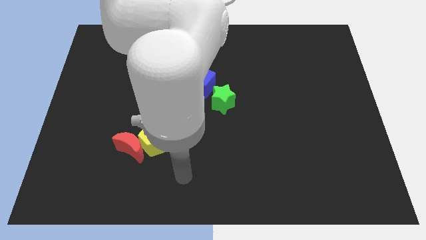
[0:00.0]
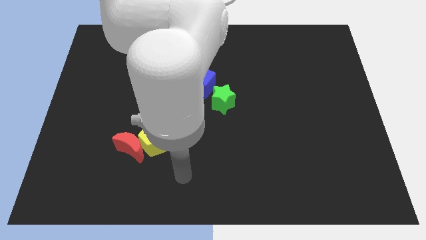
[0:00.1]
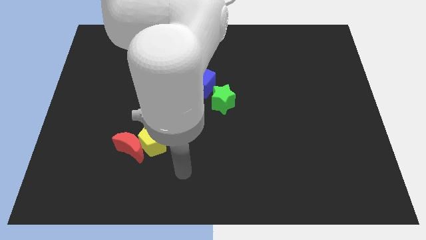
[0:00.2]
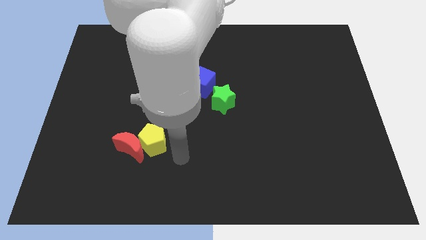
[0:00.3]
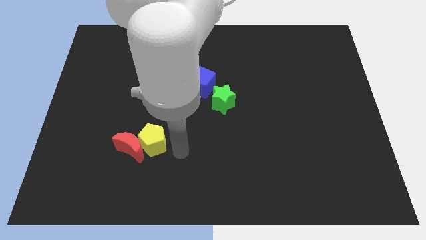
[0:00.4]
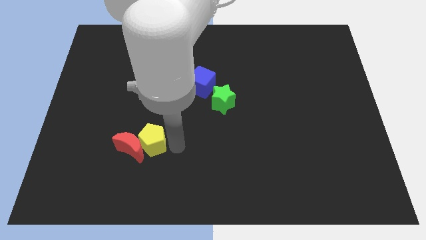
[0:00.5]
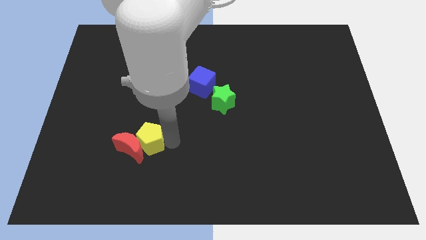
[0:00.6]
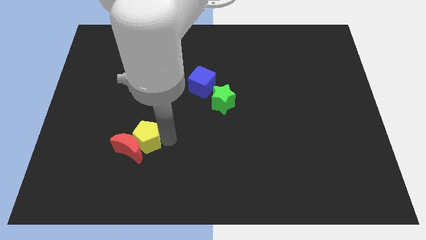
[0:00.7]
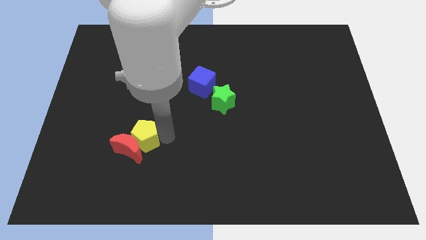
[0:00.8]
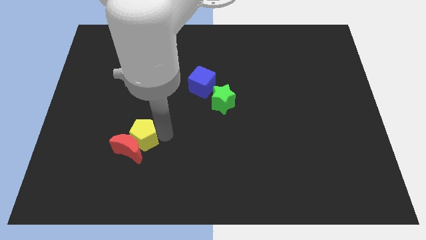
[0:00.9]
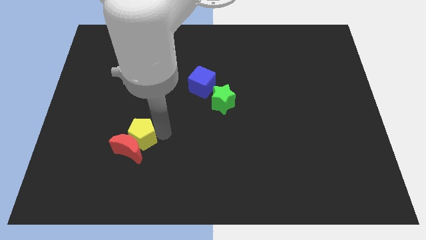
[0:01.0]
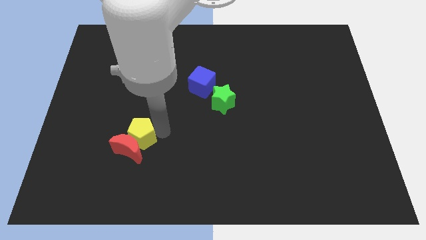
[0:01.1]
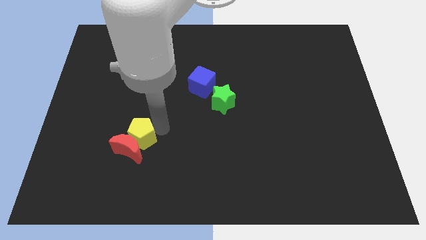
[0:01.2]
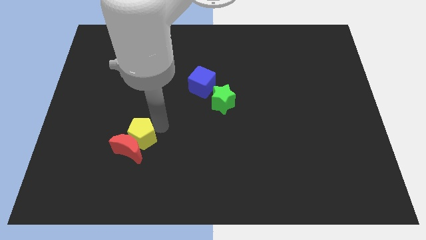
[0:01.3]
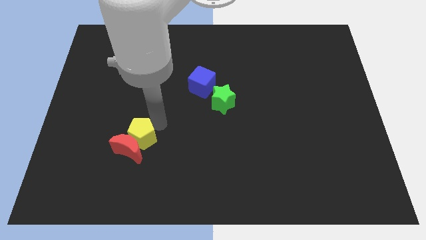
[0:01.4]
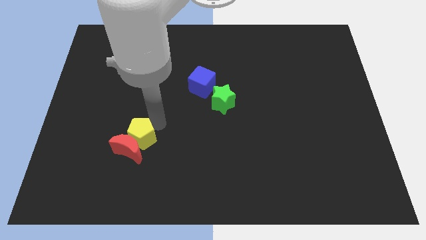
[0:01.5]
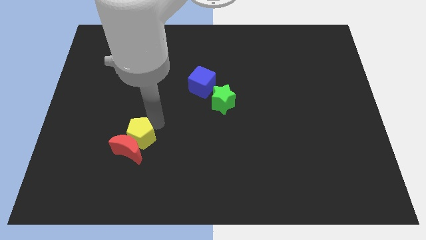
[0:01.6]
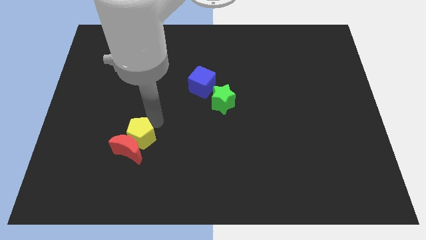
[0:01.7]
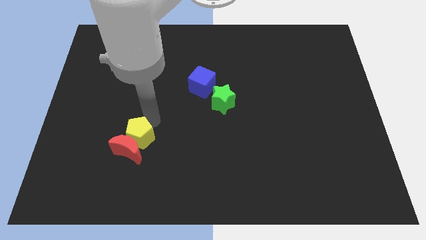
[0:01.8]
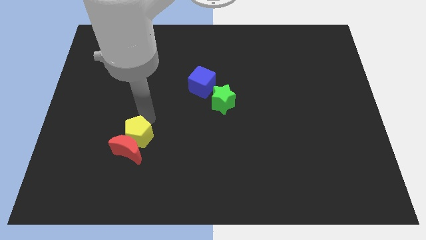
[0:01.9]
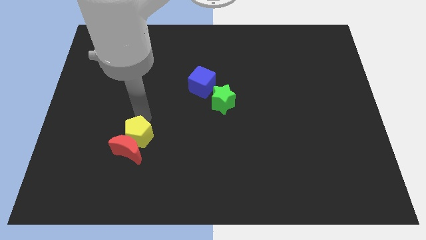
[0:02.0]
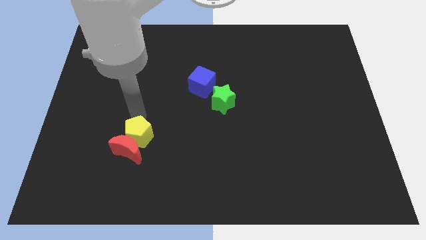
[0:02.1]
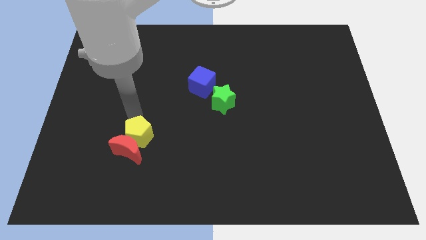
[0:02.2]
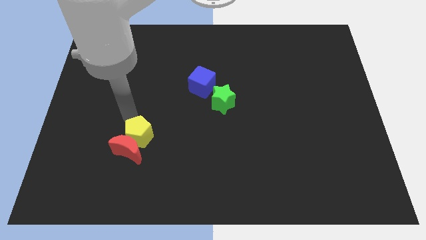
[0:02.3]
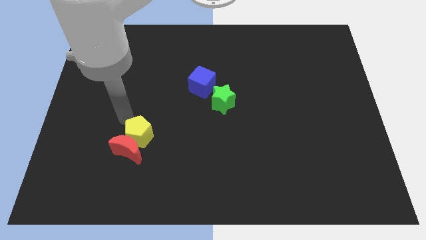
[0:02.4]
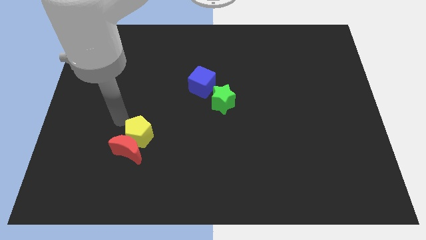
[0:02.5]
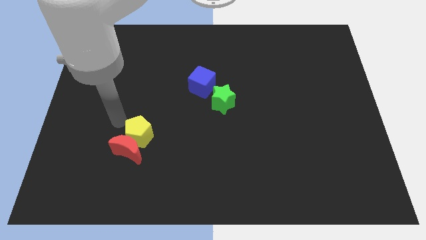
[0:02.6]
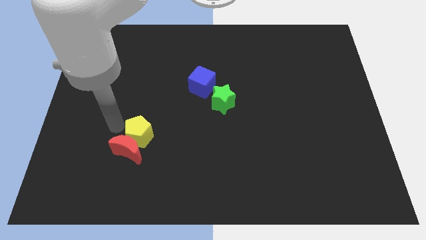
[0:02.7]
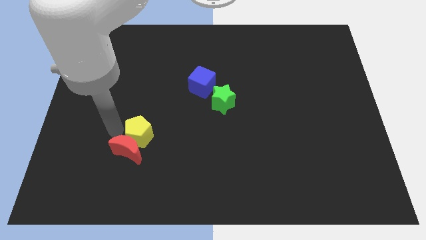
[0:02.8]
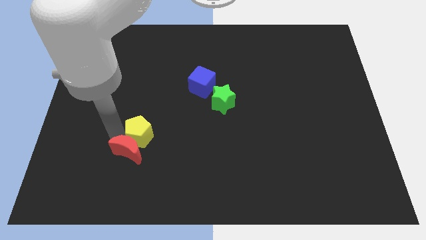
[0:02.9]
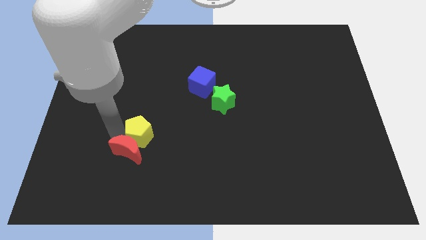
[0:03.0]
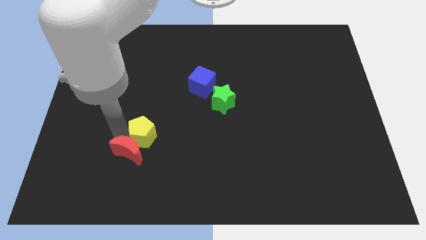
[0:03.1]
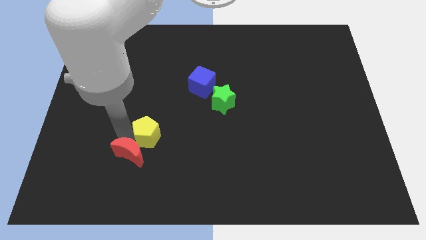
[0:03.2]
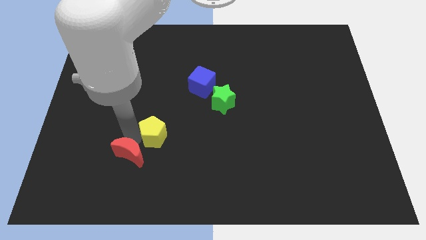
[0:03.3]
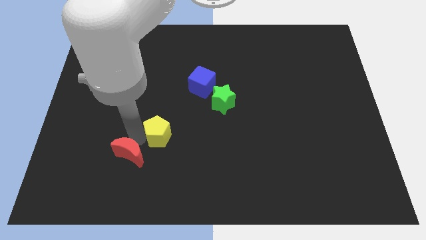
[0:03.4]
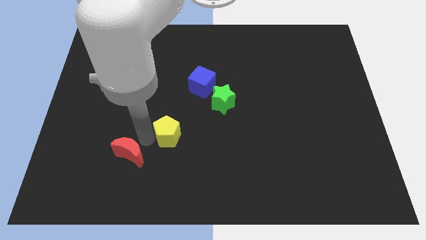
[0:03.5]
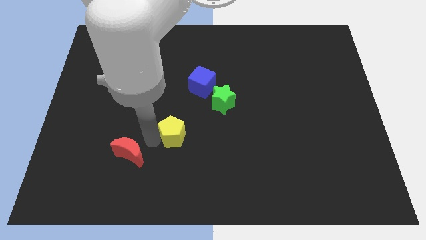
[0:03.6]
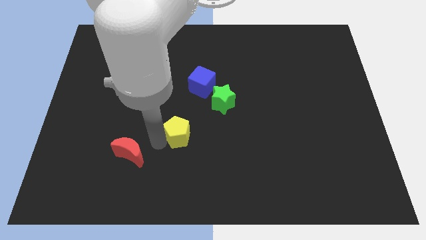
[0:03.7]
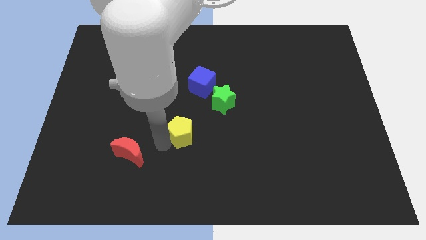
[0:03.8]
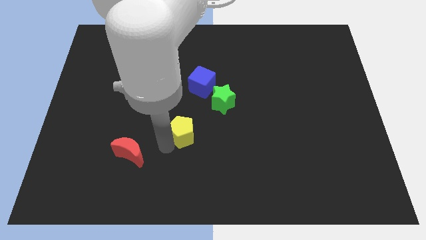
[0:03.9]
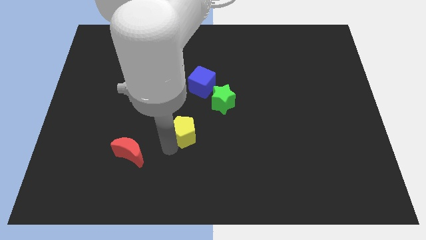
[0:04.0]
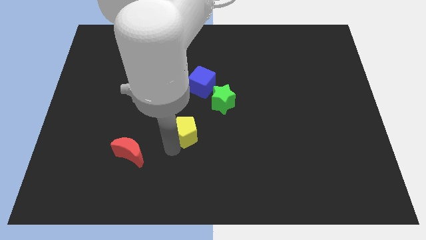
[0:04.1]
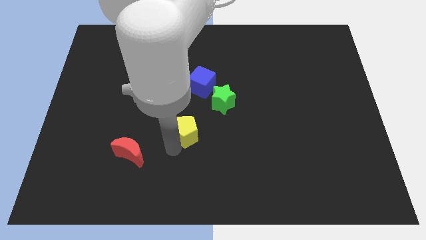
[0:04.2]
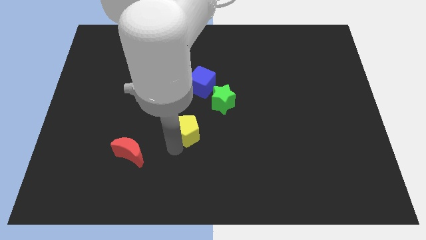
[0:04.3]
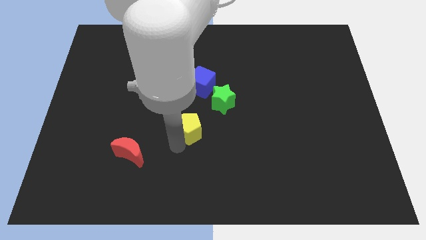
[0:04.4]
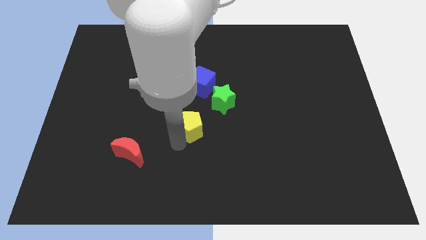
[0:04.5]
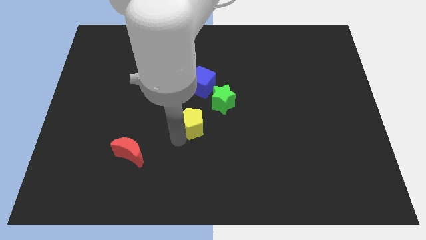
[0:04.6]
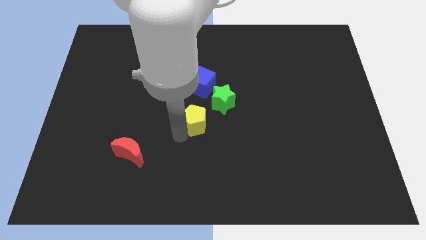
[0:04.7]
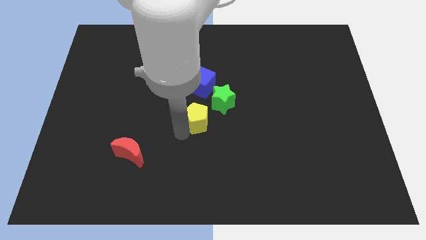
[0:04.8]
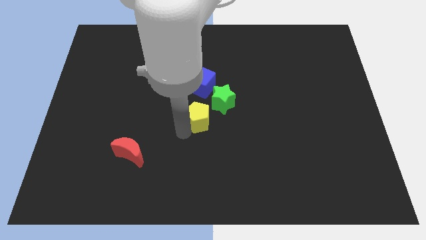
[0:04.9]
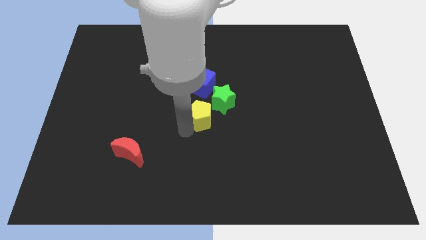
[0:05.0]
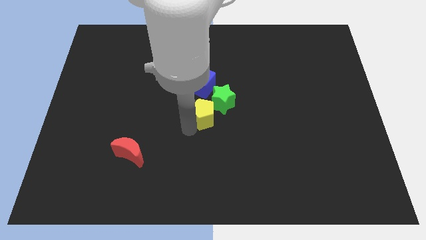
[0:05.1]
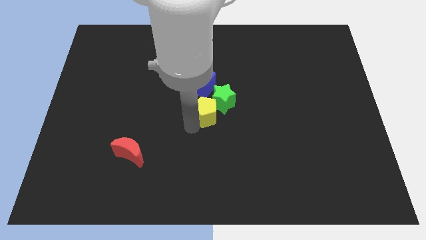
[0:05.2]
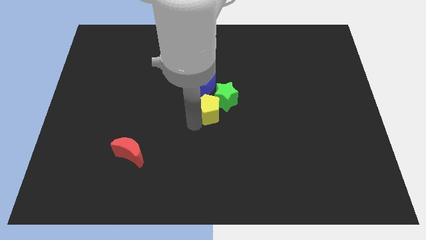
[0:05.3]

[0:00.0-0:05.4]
push the pentagon close to the star

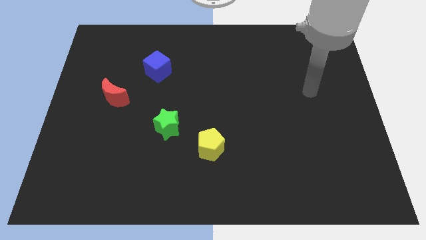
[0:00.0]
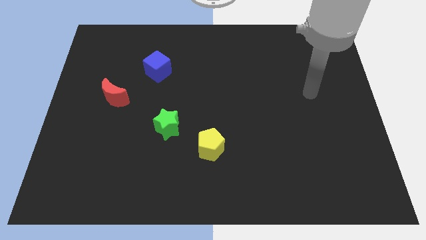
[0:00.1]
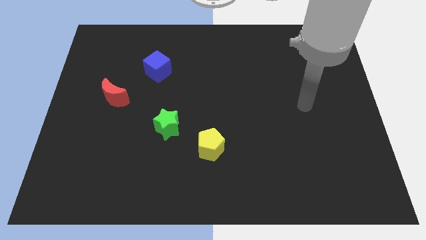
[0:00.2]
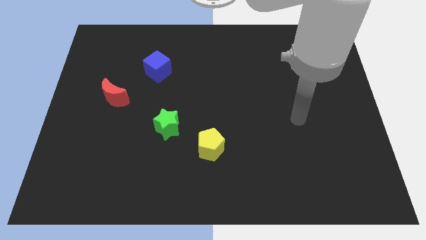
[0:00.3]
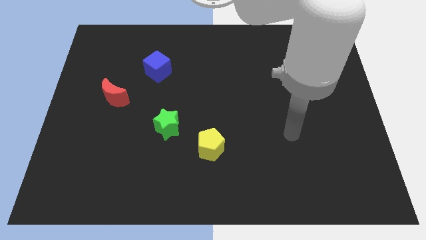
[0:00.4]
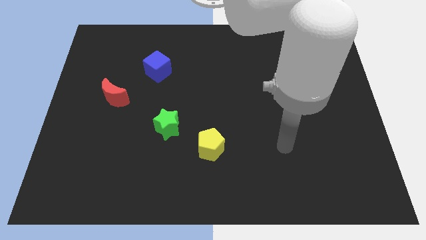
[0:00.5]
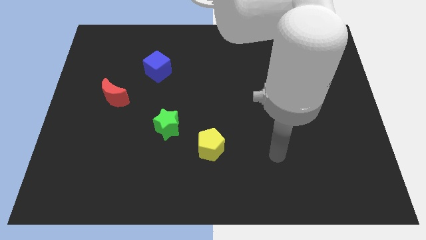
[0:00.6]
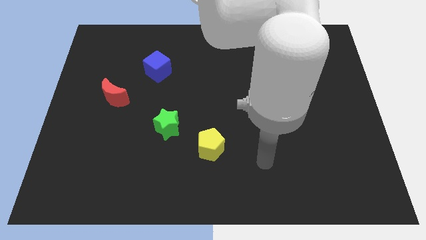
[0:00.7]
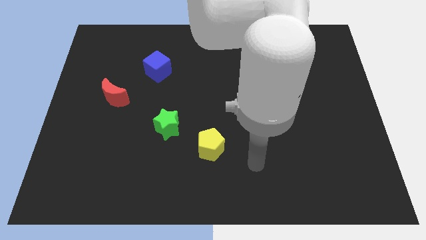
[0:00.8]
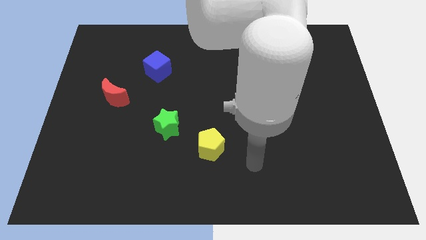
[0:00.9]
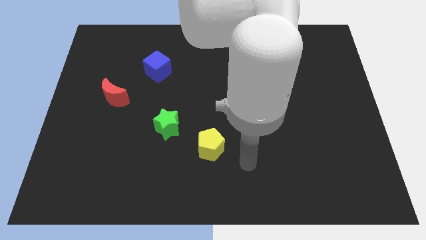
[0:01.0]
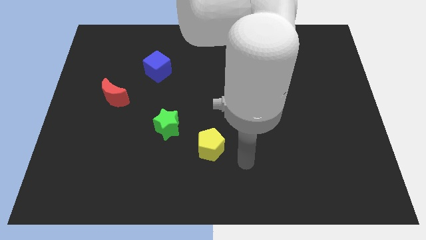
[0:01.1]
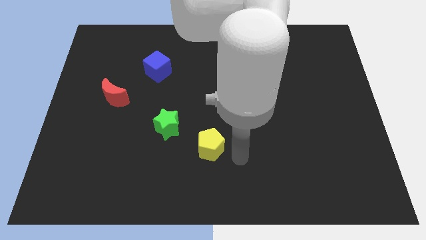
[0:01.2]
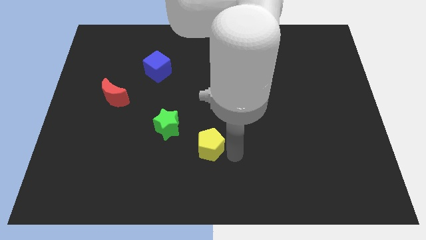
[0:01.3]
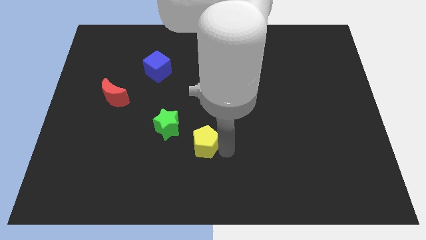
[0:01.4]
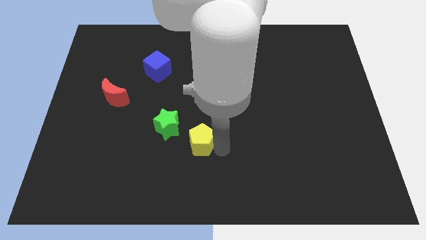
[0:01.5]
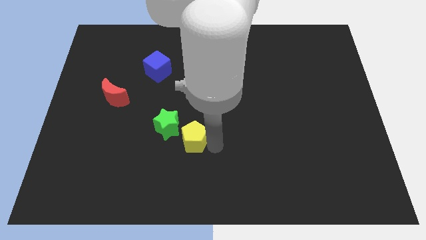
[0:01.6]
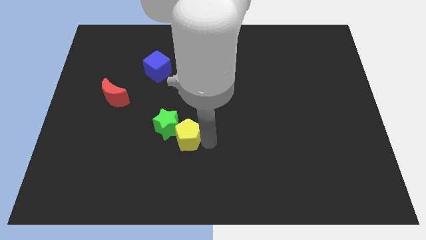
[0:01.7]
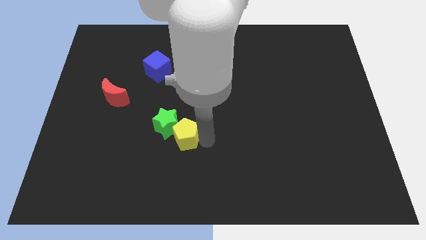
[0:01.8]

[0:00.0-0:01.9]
put the pentagon to the green block

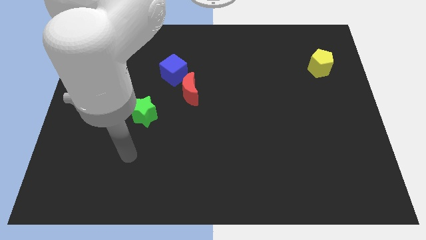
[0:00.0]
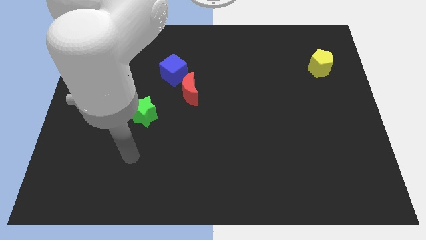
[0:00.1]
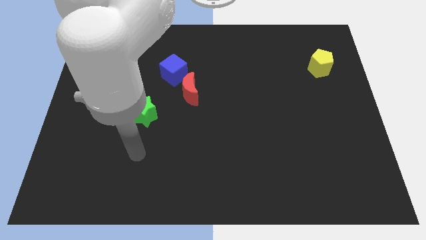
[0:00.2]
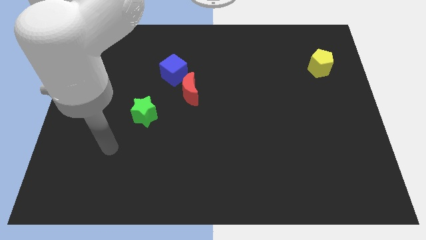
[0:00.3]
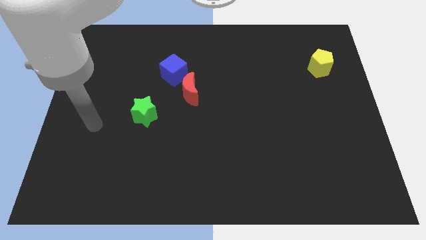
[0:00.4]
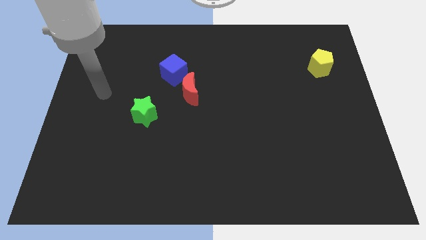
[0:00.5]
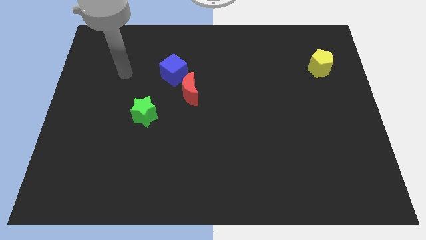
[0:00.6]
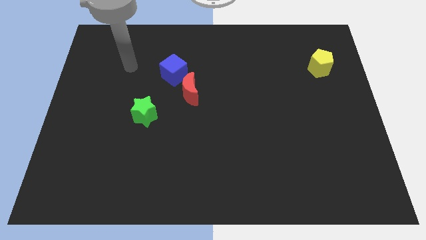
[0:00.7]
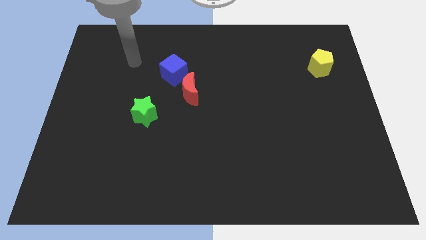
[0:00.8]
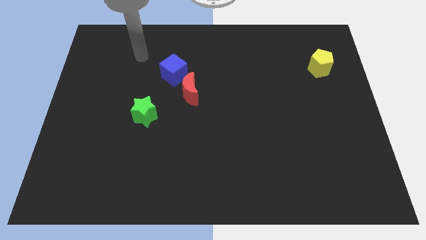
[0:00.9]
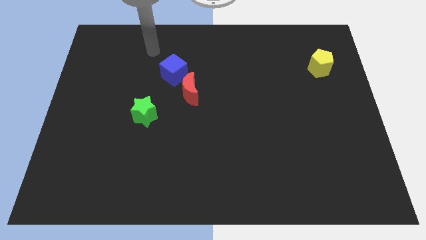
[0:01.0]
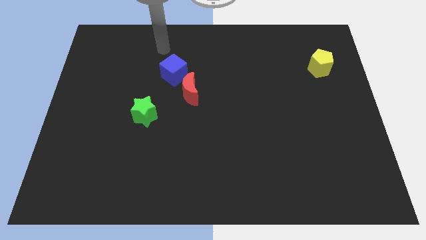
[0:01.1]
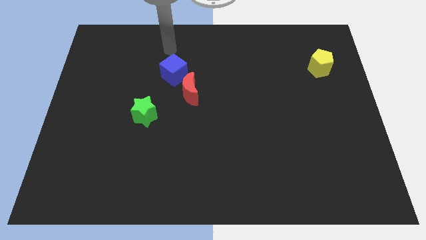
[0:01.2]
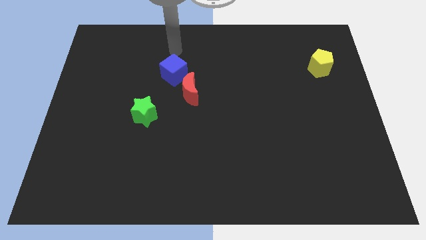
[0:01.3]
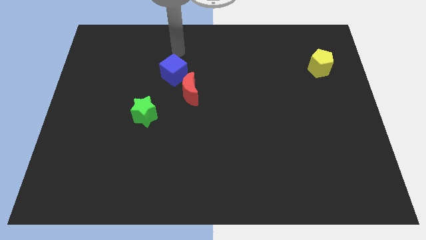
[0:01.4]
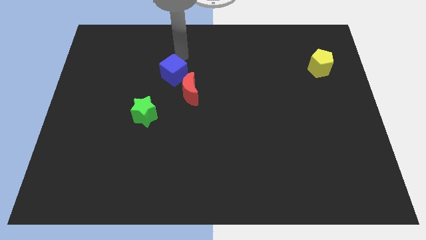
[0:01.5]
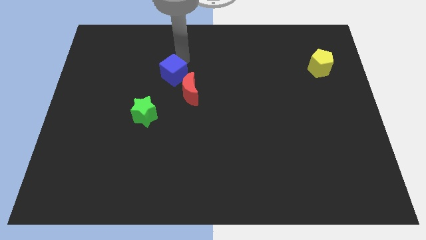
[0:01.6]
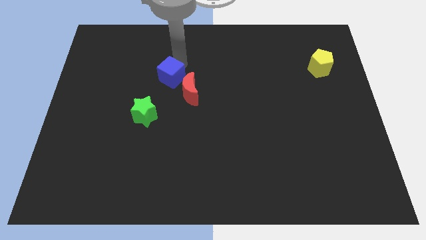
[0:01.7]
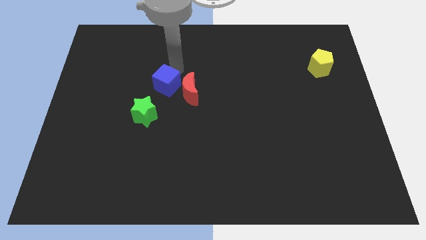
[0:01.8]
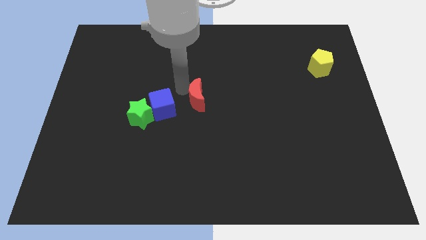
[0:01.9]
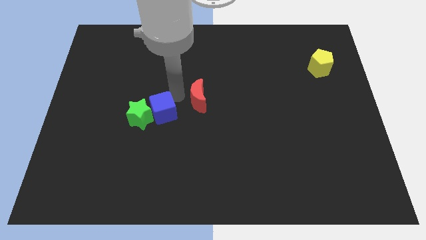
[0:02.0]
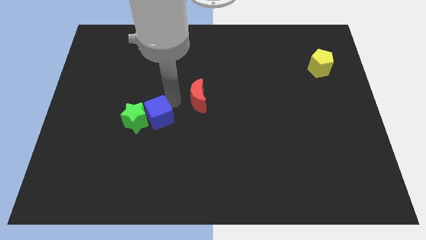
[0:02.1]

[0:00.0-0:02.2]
push the blue cube towards the green block
